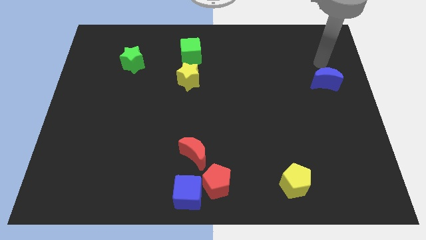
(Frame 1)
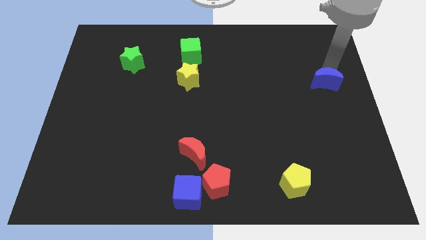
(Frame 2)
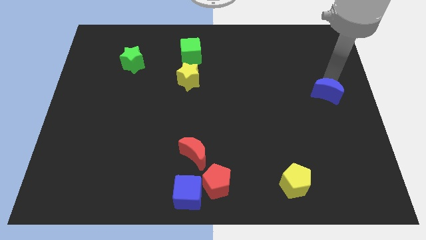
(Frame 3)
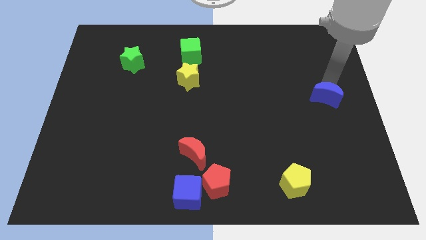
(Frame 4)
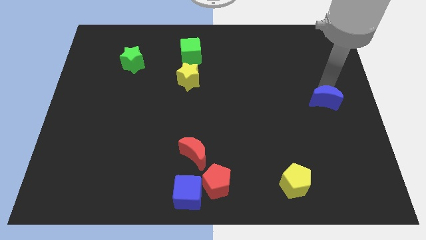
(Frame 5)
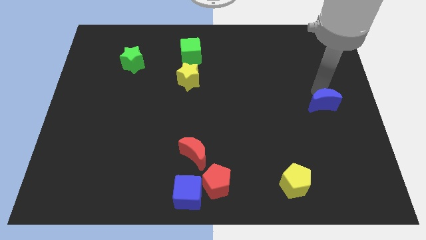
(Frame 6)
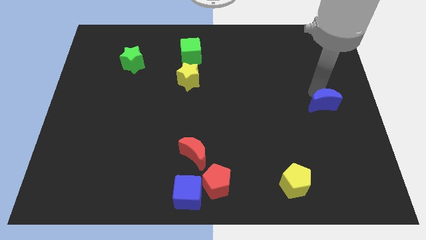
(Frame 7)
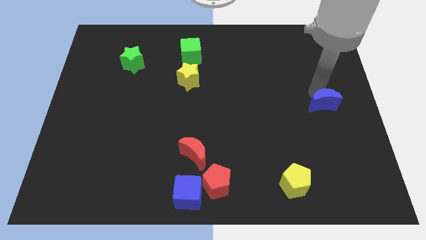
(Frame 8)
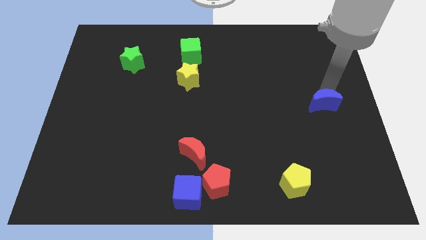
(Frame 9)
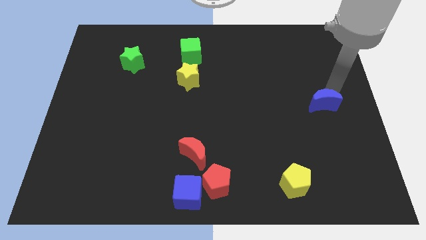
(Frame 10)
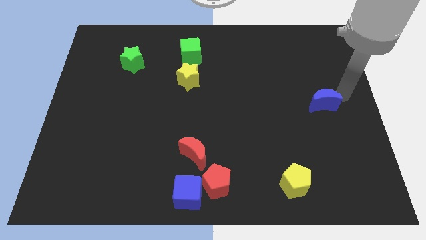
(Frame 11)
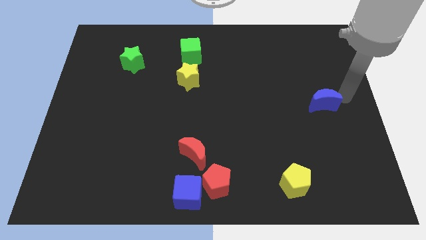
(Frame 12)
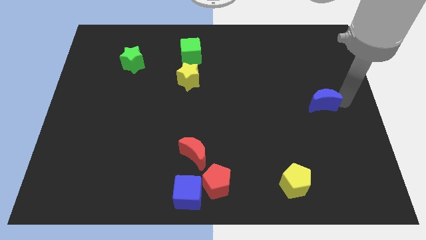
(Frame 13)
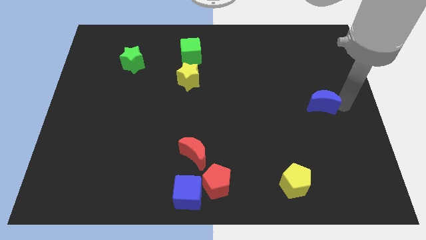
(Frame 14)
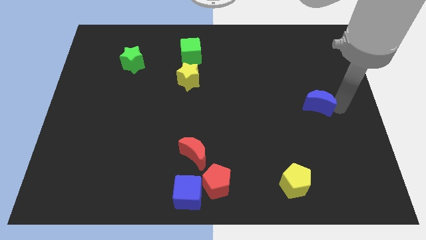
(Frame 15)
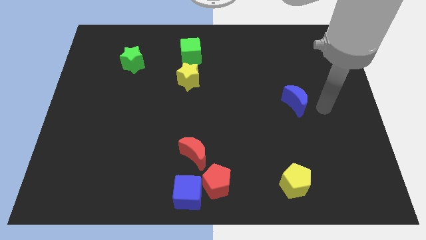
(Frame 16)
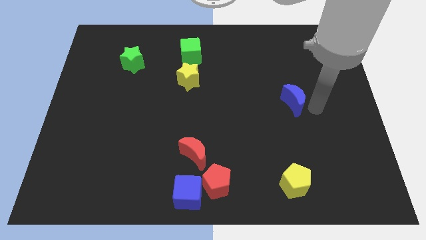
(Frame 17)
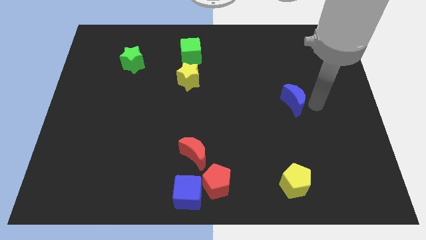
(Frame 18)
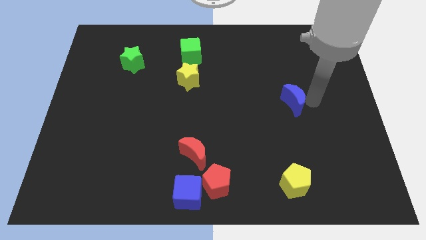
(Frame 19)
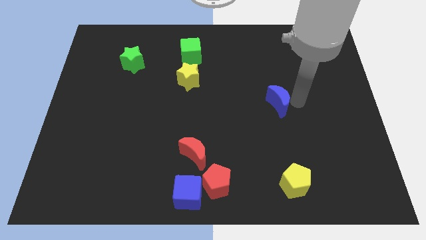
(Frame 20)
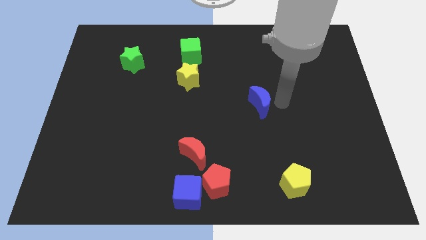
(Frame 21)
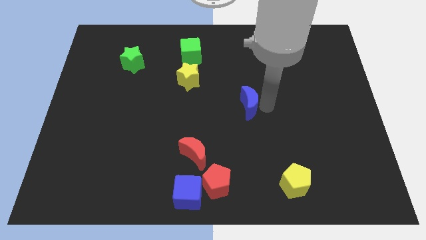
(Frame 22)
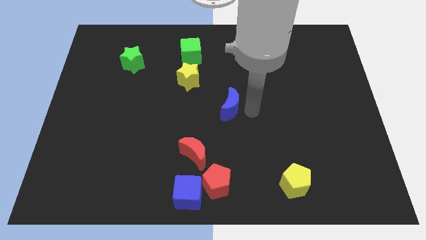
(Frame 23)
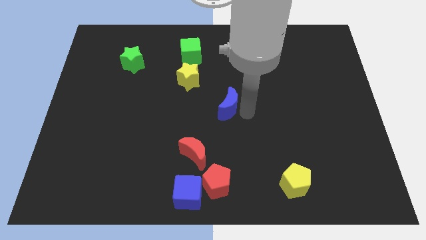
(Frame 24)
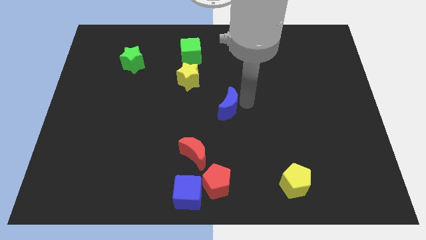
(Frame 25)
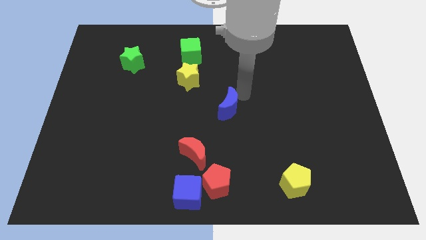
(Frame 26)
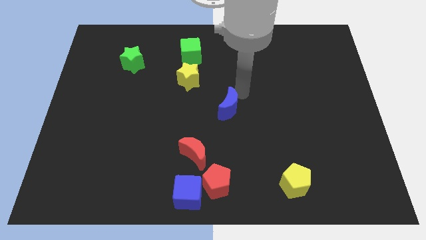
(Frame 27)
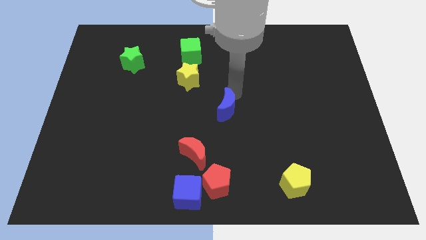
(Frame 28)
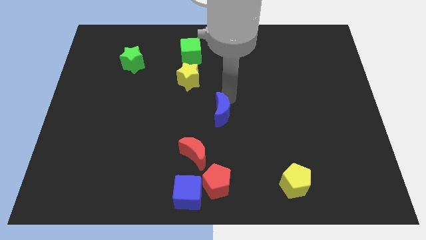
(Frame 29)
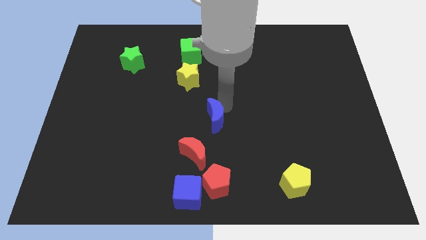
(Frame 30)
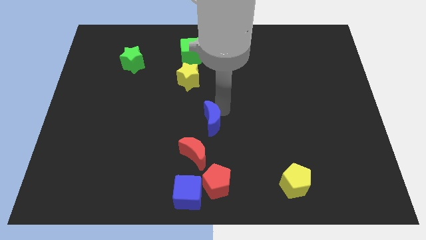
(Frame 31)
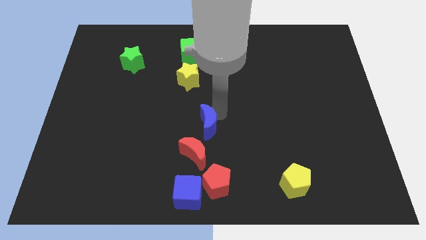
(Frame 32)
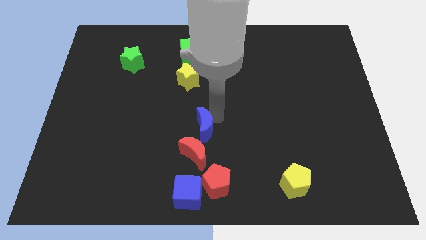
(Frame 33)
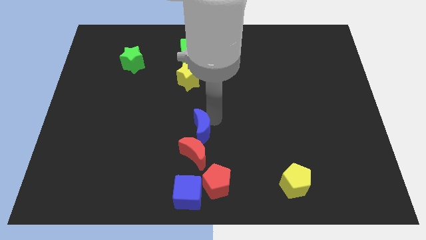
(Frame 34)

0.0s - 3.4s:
place the blue crescent at center of the board

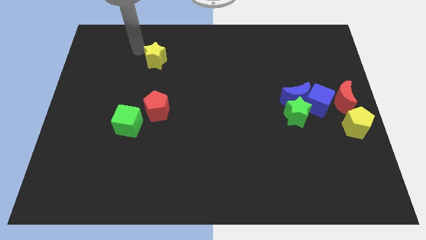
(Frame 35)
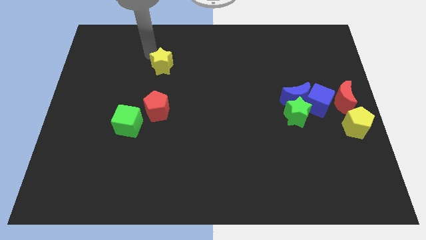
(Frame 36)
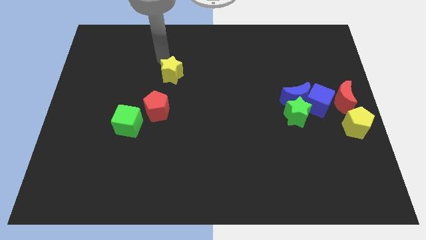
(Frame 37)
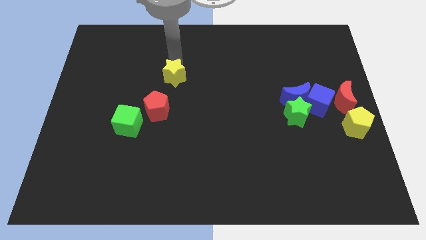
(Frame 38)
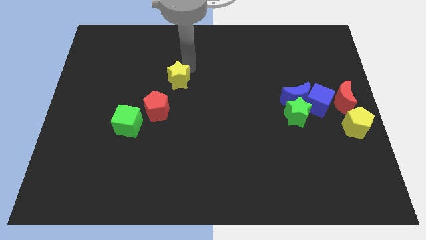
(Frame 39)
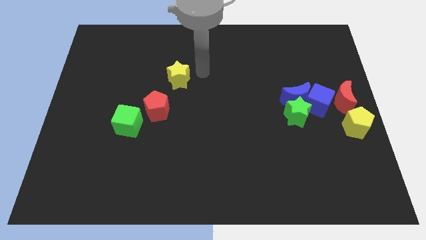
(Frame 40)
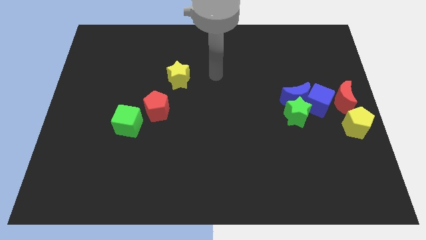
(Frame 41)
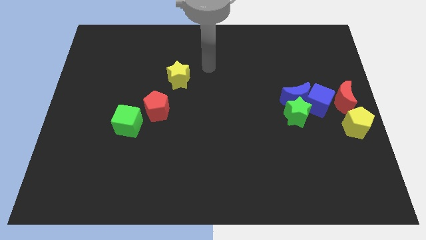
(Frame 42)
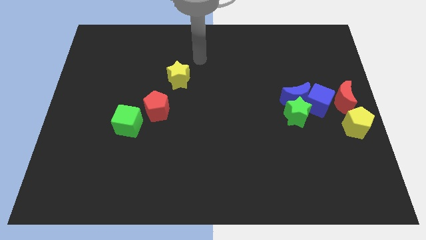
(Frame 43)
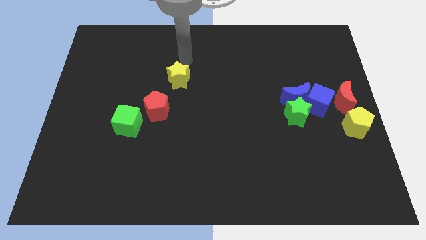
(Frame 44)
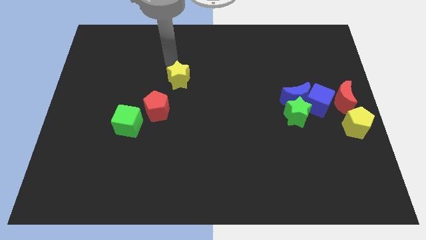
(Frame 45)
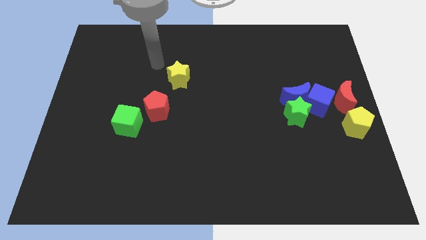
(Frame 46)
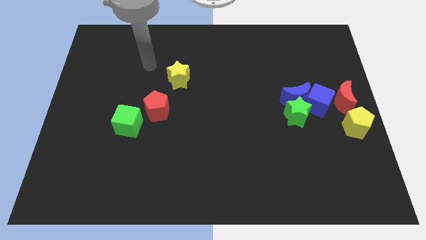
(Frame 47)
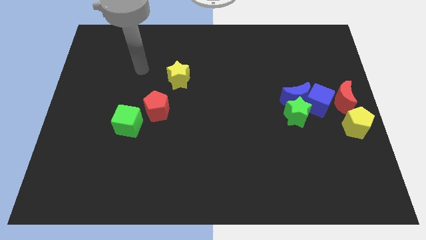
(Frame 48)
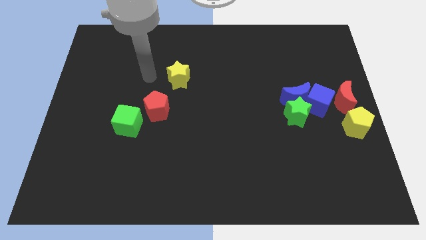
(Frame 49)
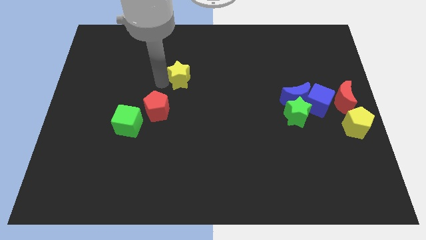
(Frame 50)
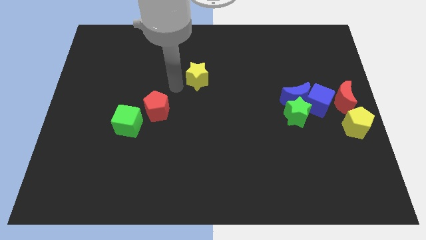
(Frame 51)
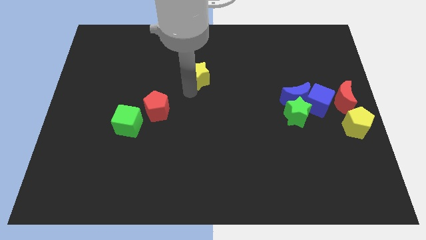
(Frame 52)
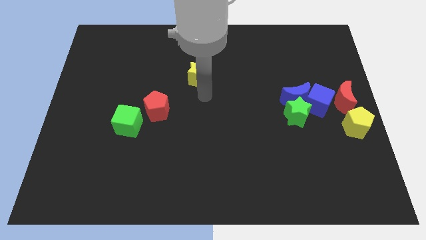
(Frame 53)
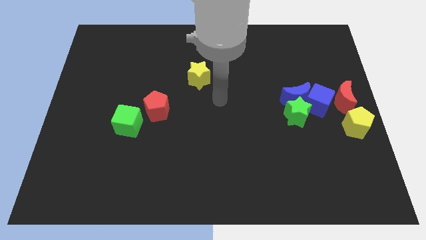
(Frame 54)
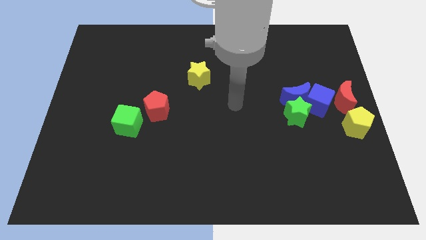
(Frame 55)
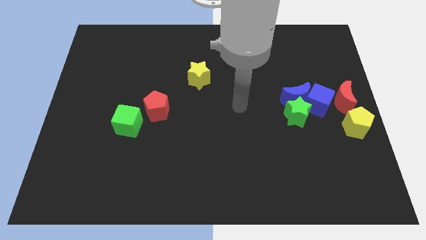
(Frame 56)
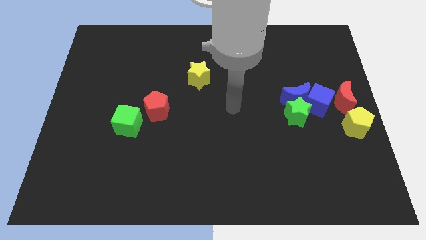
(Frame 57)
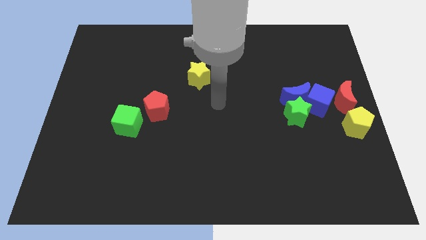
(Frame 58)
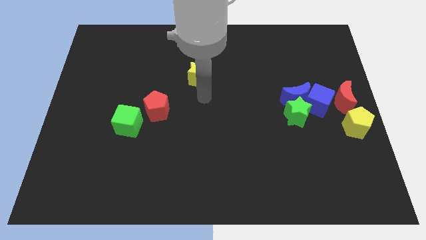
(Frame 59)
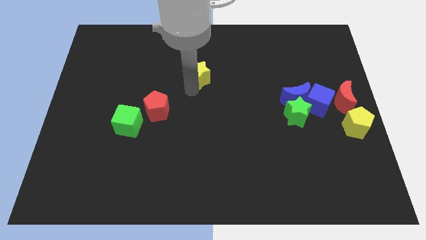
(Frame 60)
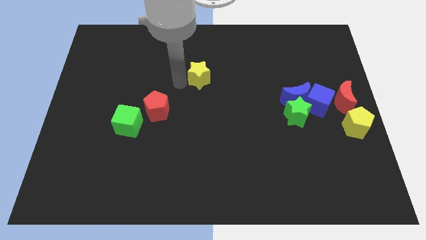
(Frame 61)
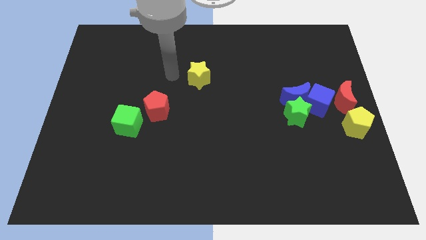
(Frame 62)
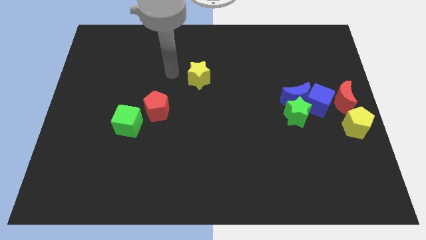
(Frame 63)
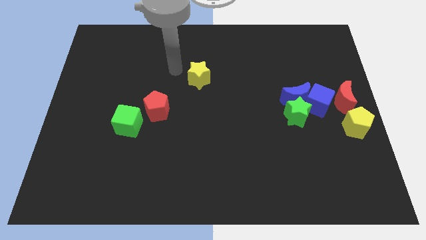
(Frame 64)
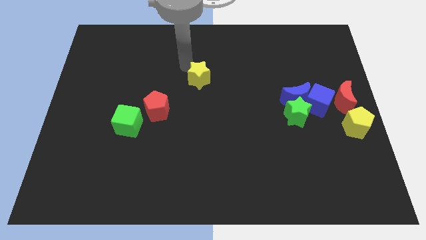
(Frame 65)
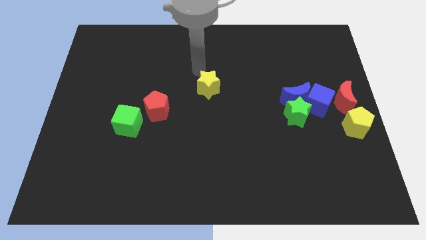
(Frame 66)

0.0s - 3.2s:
push the yellow star slightly to the right

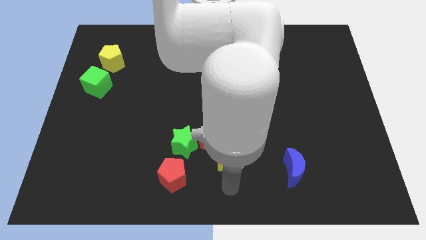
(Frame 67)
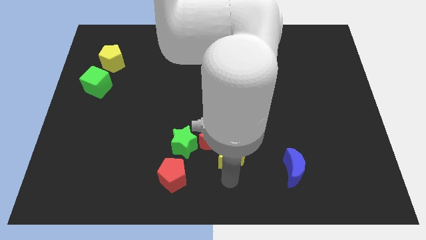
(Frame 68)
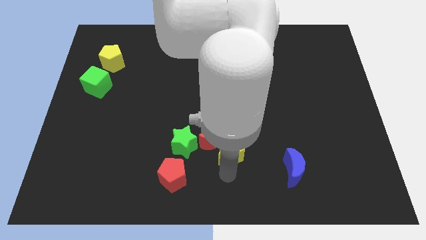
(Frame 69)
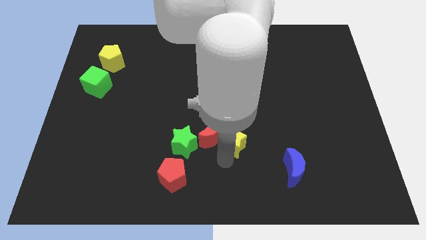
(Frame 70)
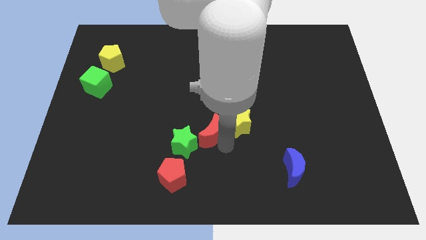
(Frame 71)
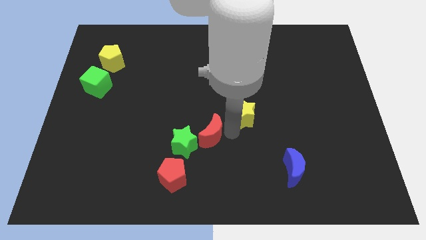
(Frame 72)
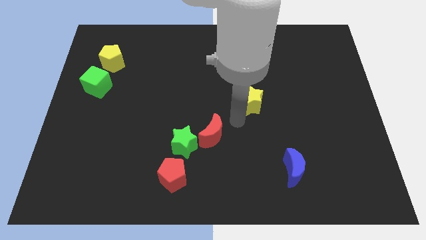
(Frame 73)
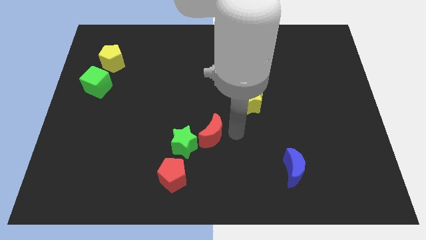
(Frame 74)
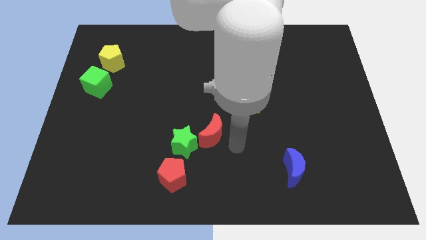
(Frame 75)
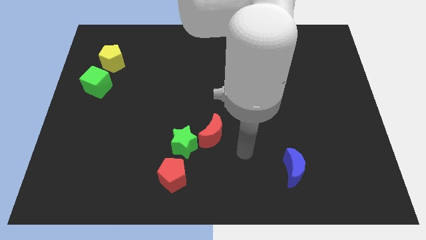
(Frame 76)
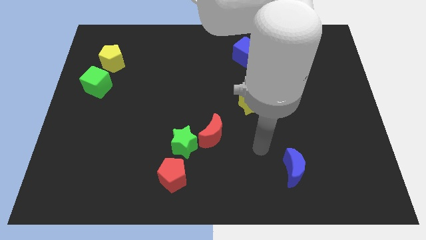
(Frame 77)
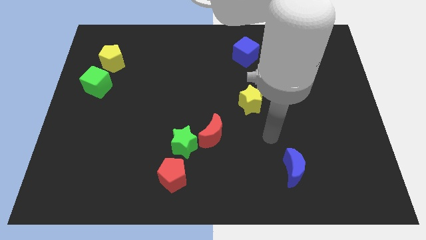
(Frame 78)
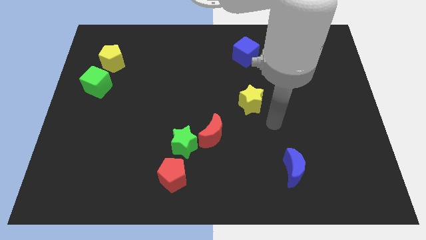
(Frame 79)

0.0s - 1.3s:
place the yellow star below the blue cube

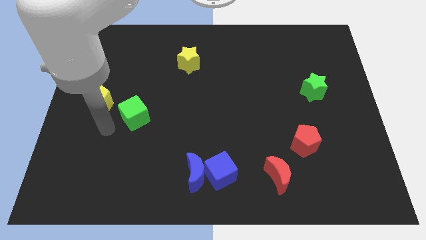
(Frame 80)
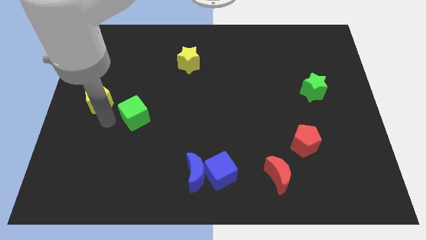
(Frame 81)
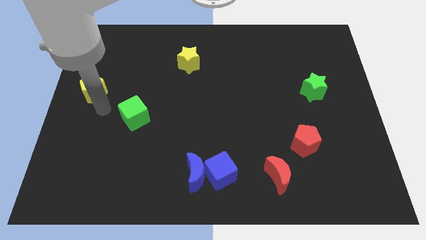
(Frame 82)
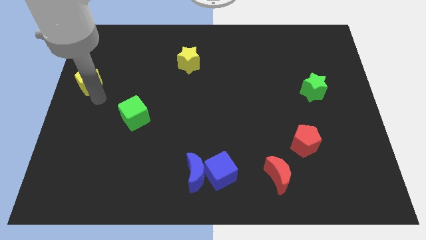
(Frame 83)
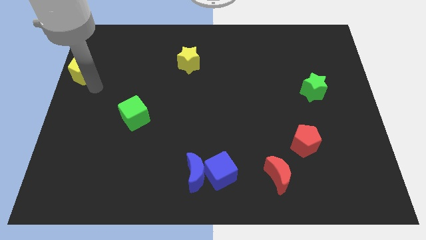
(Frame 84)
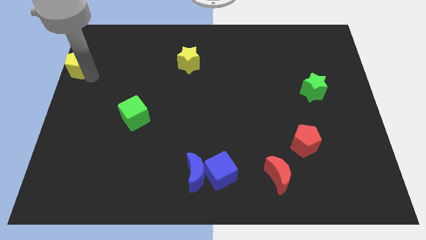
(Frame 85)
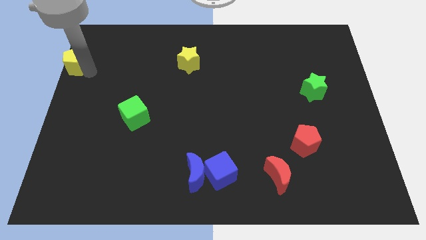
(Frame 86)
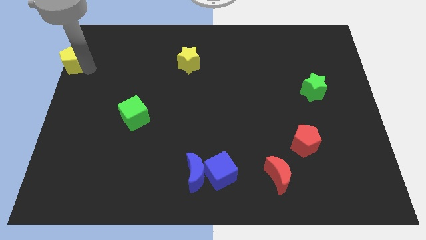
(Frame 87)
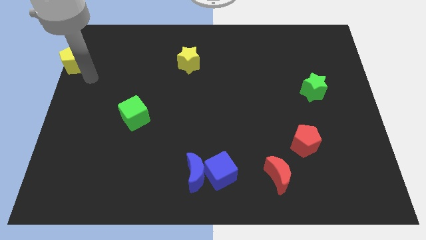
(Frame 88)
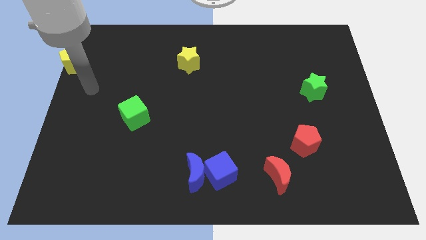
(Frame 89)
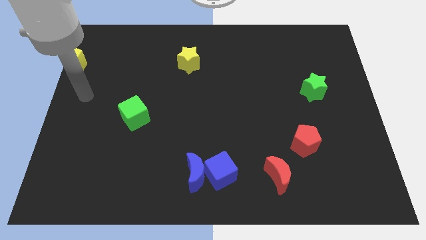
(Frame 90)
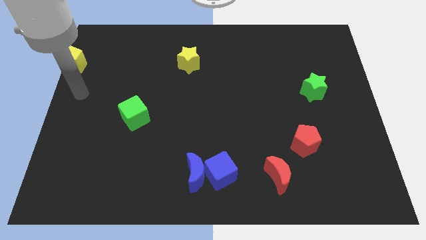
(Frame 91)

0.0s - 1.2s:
separate the yellow pentagon from the green cube
